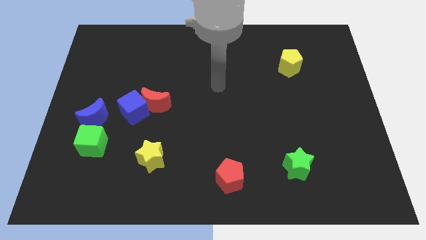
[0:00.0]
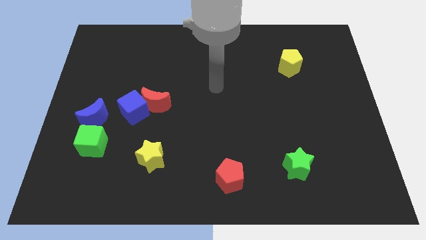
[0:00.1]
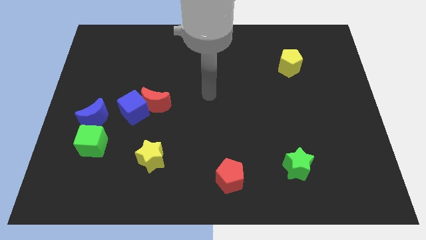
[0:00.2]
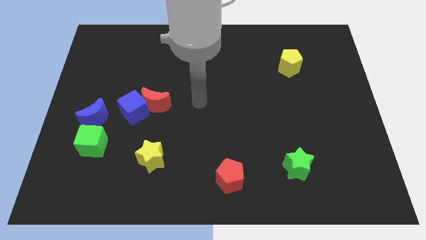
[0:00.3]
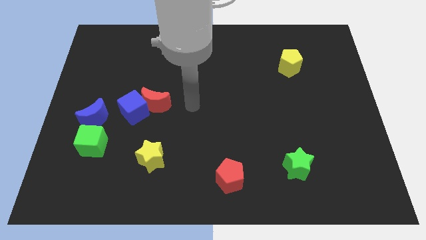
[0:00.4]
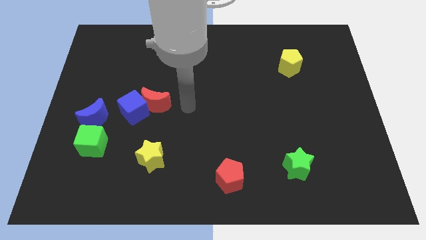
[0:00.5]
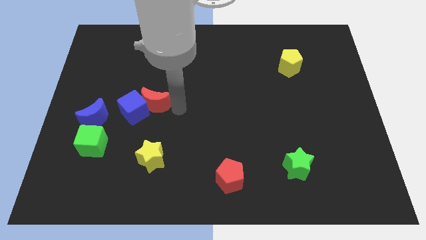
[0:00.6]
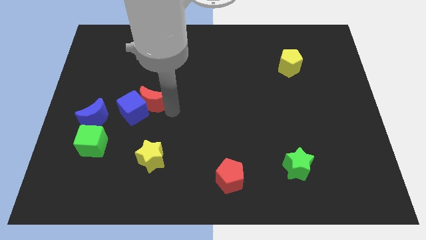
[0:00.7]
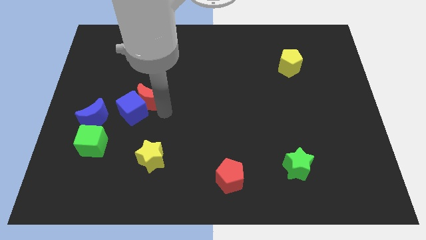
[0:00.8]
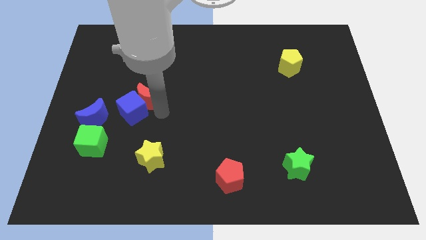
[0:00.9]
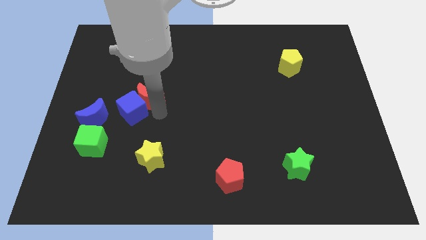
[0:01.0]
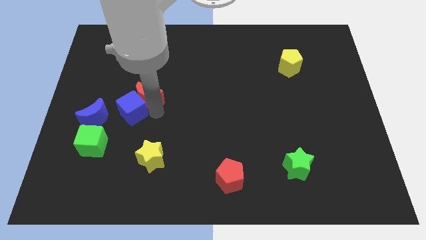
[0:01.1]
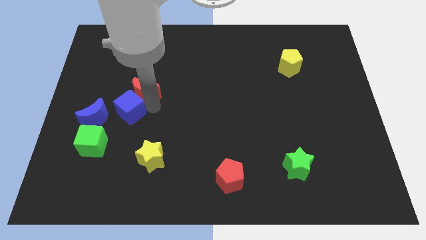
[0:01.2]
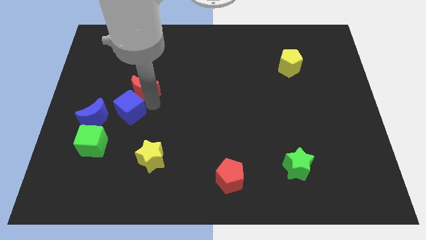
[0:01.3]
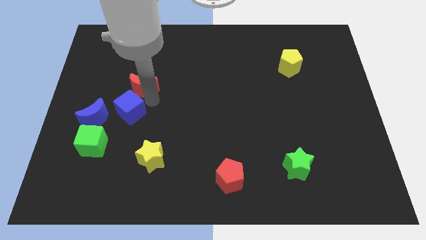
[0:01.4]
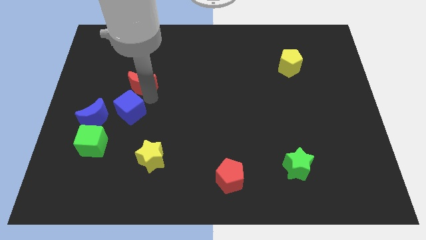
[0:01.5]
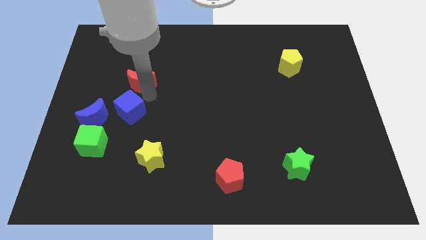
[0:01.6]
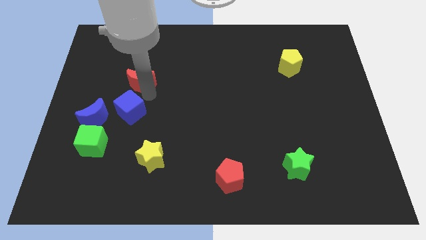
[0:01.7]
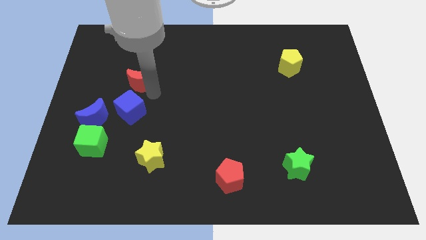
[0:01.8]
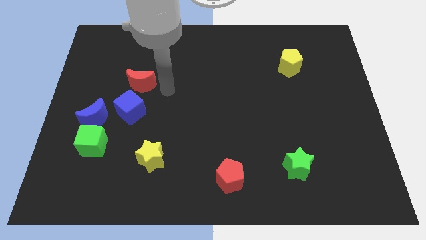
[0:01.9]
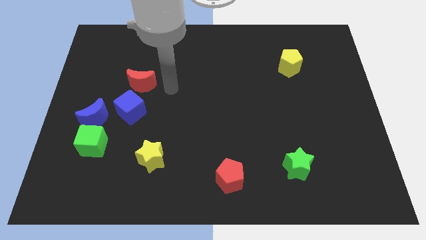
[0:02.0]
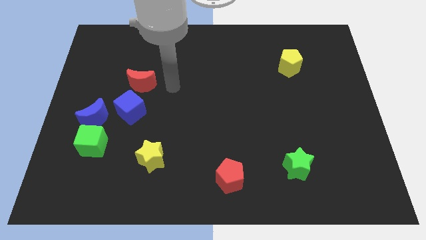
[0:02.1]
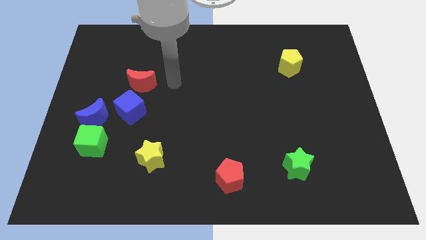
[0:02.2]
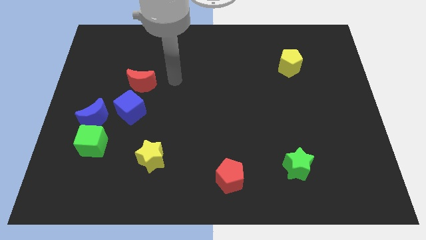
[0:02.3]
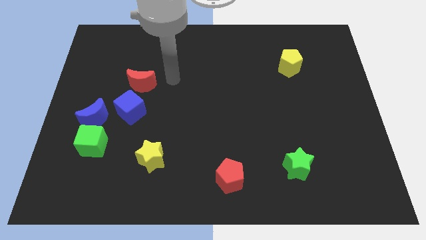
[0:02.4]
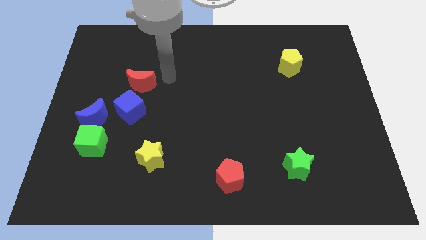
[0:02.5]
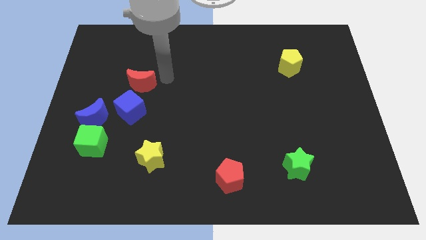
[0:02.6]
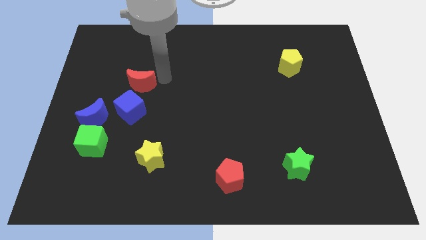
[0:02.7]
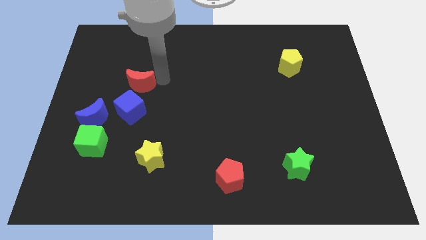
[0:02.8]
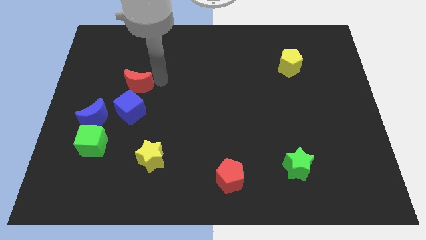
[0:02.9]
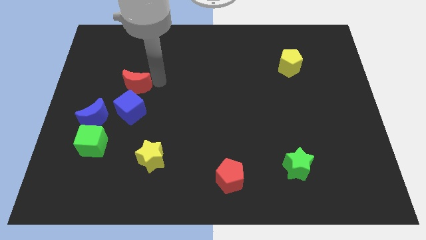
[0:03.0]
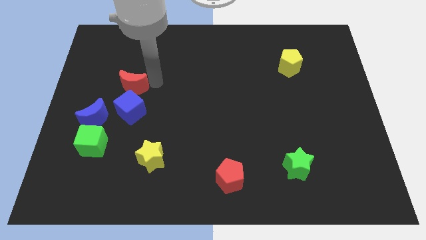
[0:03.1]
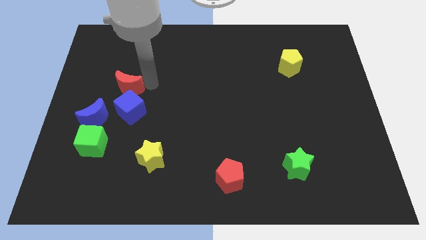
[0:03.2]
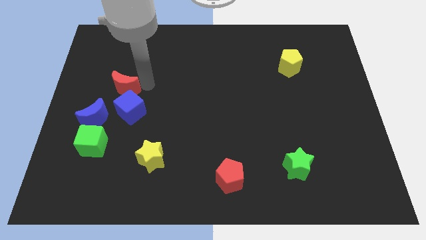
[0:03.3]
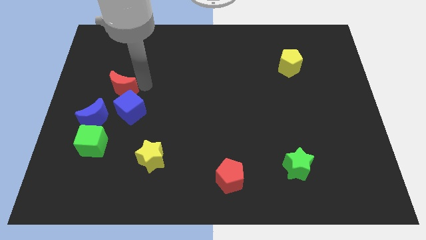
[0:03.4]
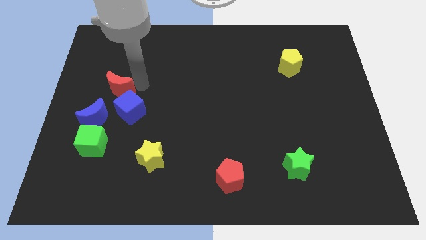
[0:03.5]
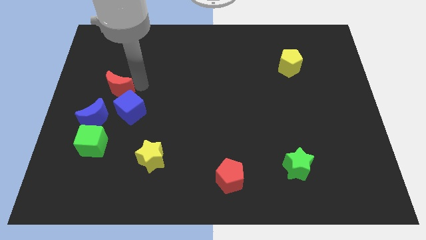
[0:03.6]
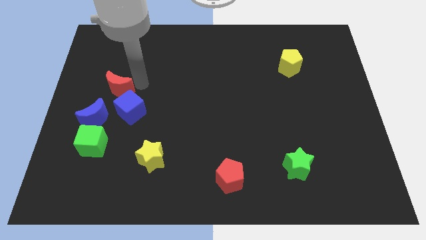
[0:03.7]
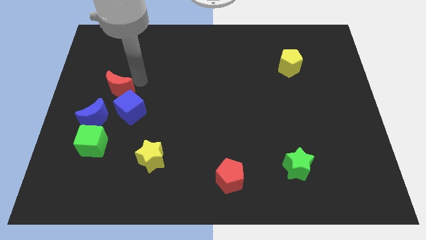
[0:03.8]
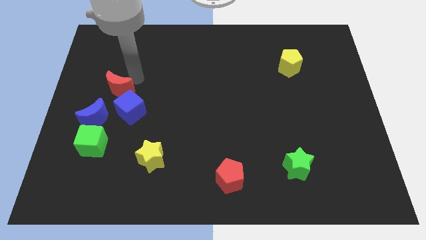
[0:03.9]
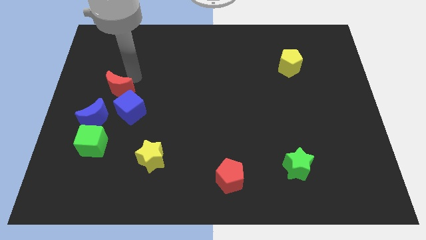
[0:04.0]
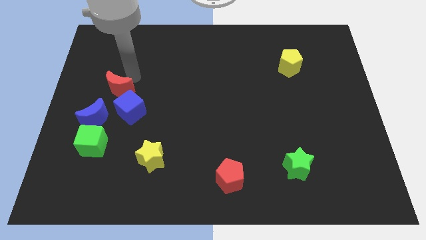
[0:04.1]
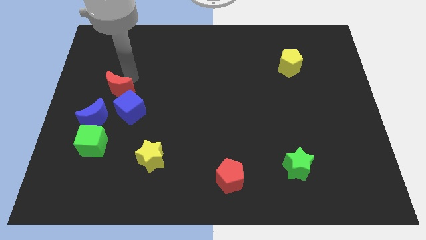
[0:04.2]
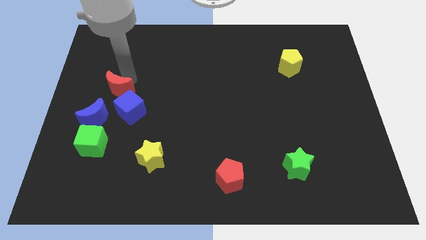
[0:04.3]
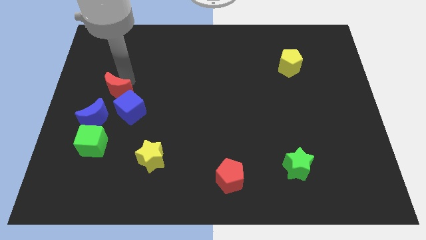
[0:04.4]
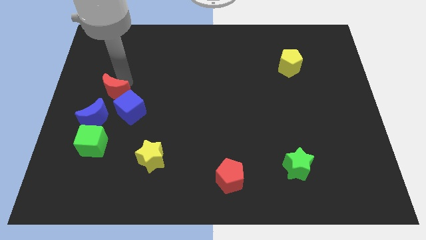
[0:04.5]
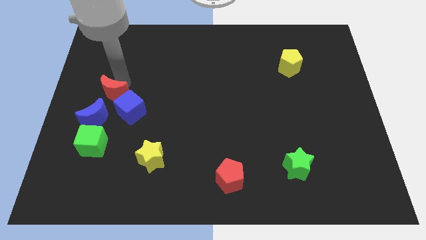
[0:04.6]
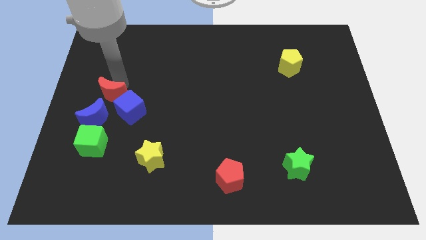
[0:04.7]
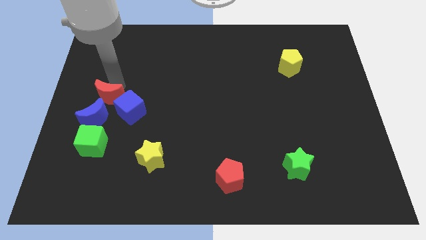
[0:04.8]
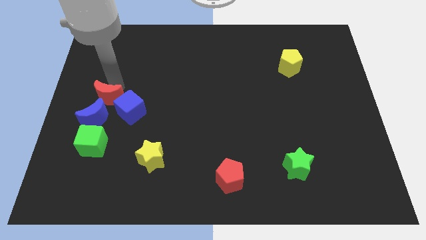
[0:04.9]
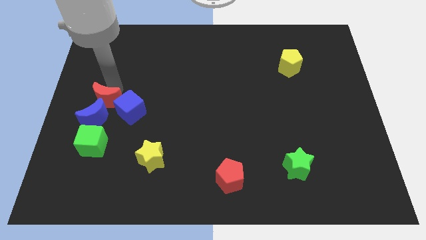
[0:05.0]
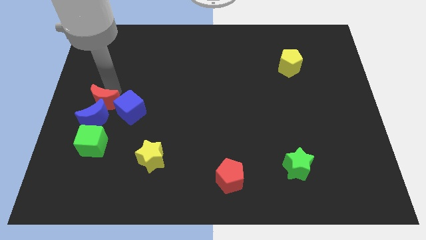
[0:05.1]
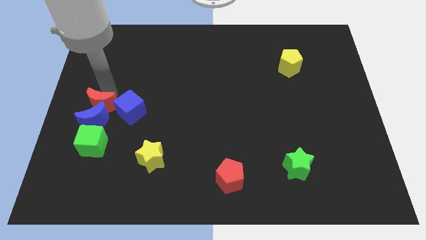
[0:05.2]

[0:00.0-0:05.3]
move the red moon towards the blue moon

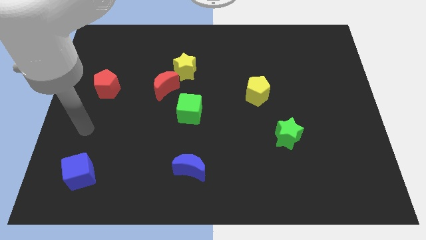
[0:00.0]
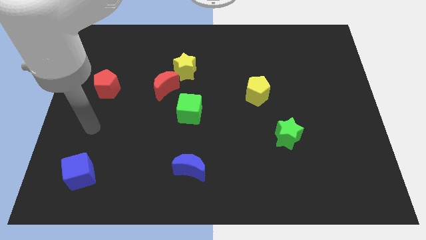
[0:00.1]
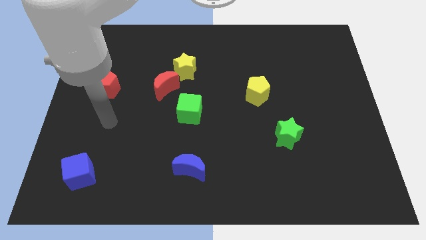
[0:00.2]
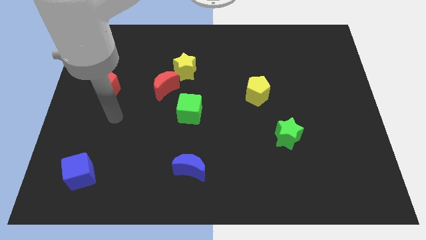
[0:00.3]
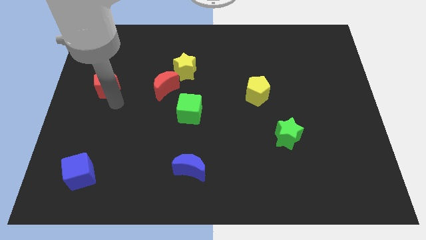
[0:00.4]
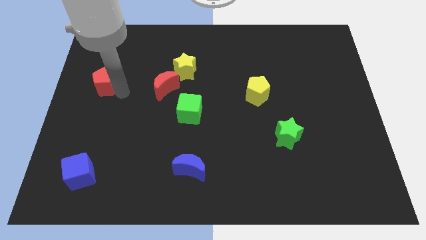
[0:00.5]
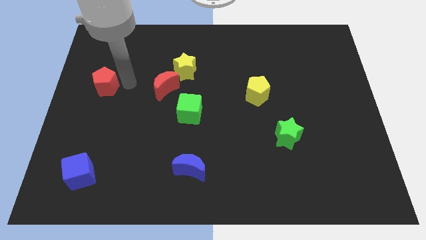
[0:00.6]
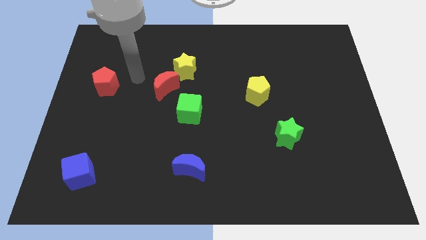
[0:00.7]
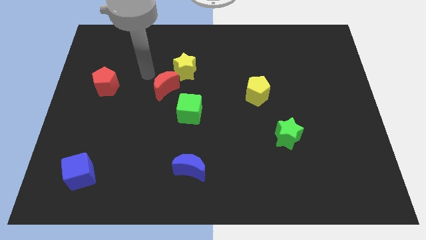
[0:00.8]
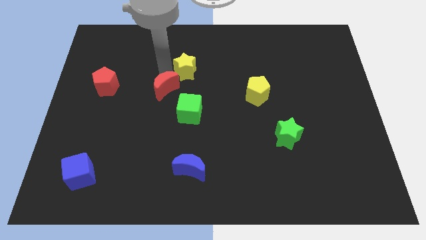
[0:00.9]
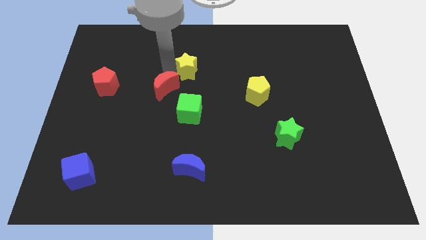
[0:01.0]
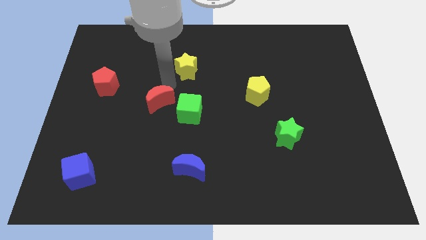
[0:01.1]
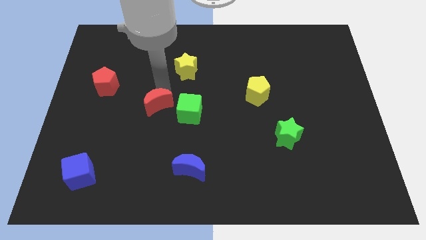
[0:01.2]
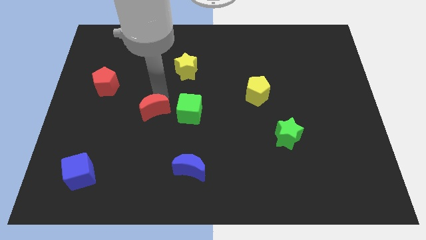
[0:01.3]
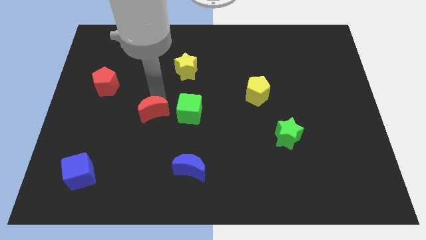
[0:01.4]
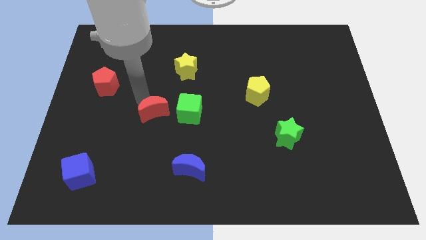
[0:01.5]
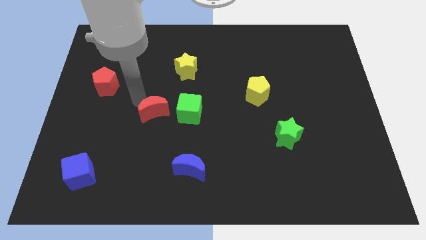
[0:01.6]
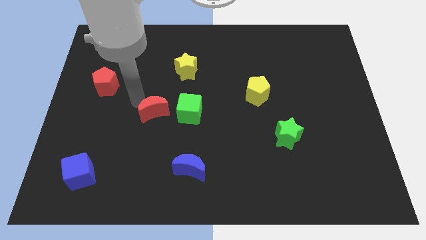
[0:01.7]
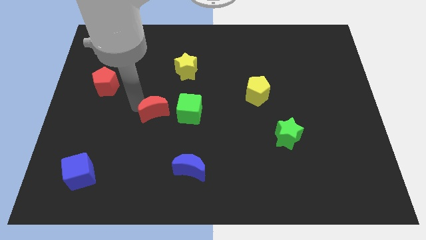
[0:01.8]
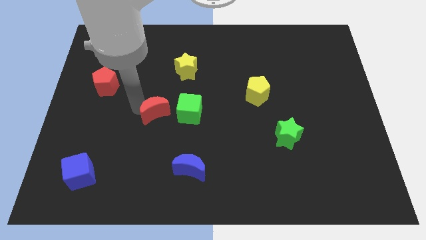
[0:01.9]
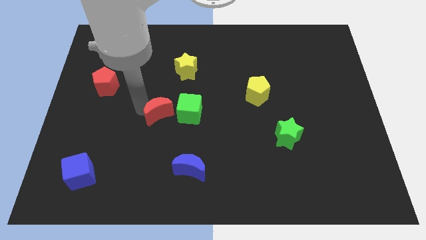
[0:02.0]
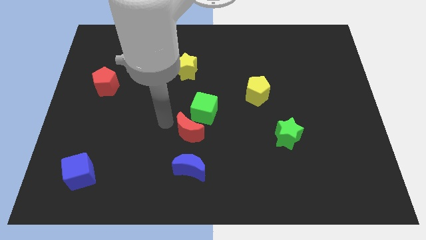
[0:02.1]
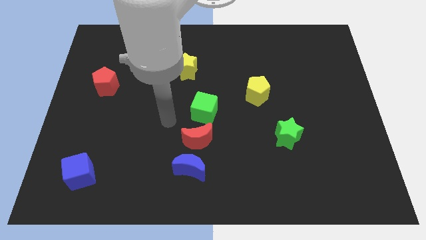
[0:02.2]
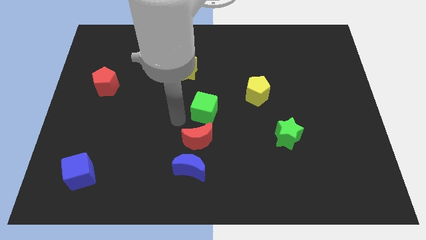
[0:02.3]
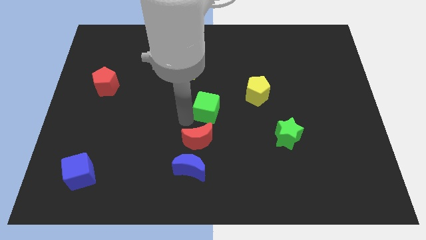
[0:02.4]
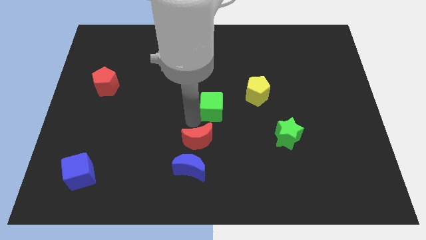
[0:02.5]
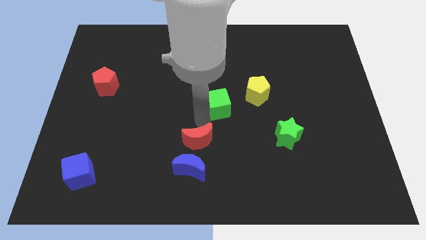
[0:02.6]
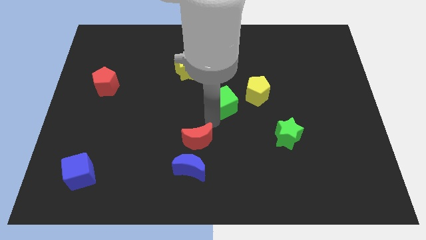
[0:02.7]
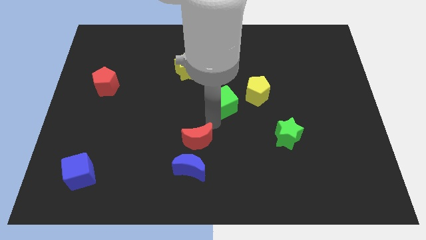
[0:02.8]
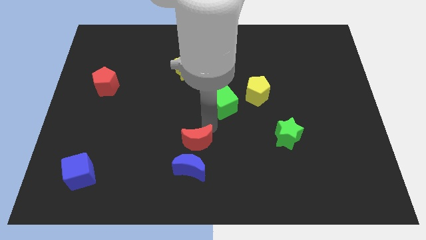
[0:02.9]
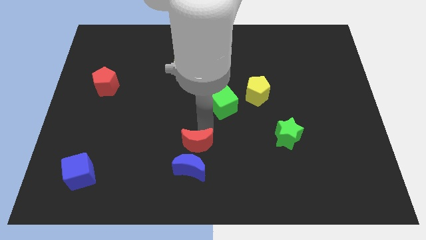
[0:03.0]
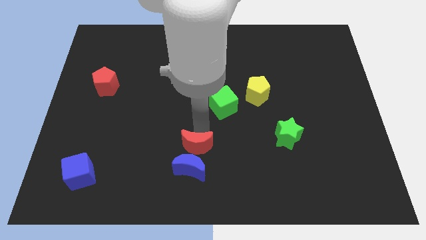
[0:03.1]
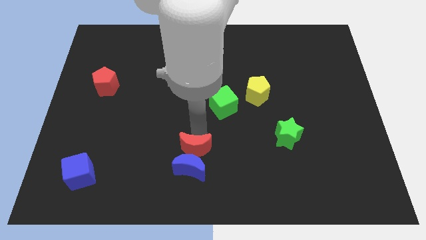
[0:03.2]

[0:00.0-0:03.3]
put the red moon towards the blue moon
